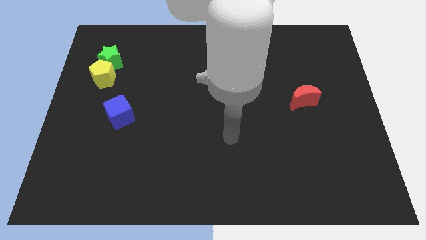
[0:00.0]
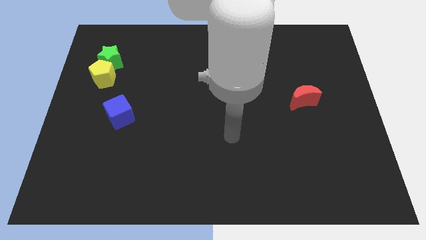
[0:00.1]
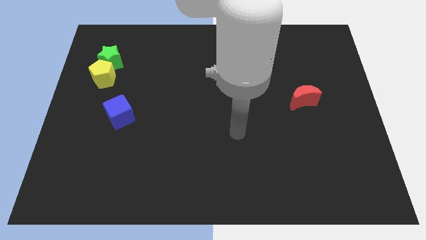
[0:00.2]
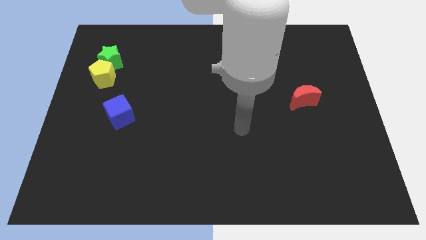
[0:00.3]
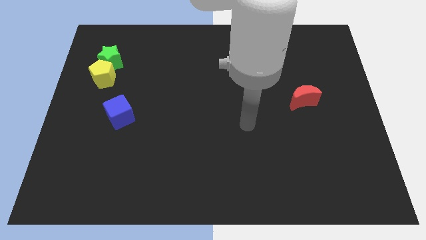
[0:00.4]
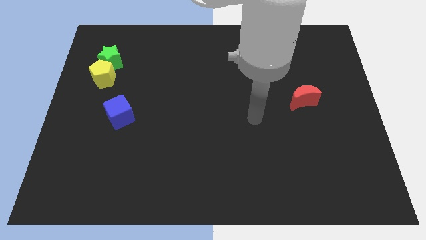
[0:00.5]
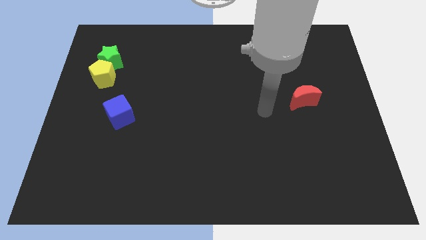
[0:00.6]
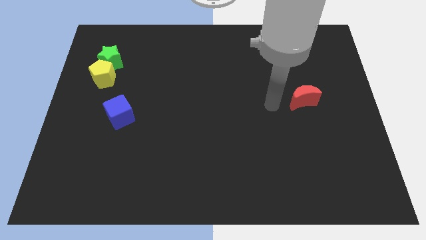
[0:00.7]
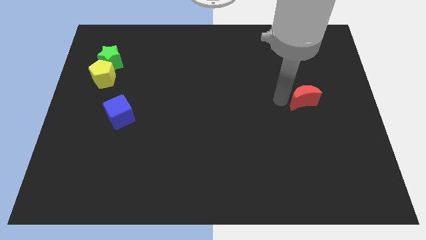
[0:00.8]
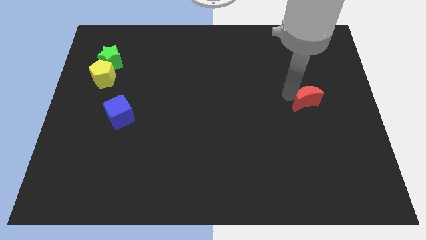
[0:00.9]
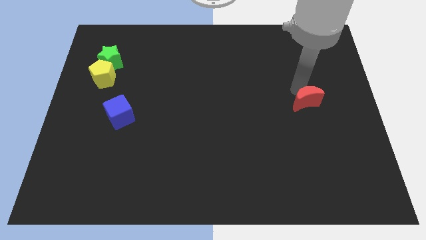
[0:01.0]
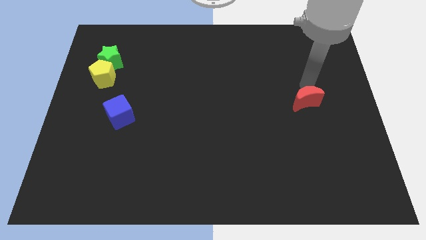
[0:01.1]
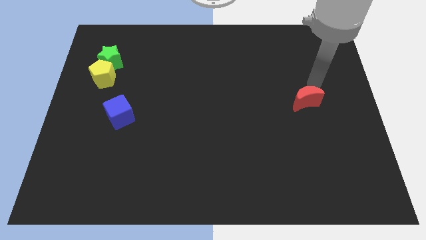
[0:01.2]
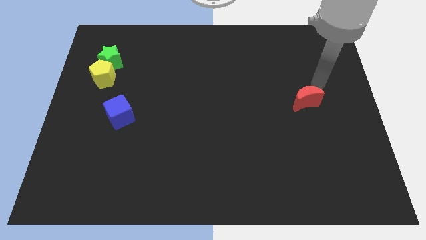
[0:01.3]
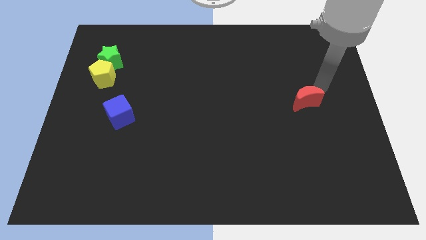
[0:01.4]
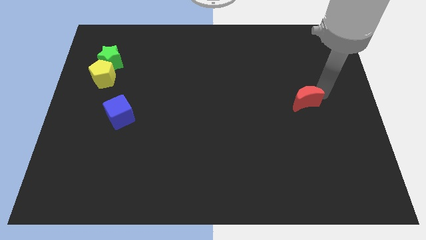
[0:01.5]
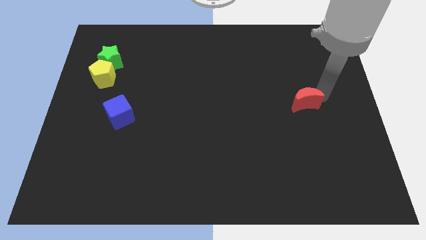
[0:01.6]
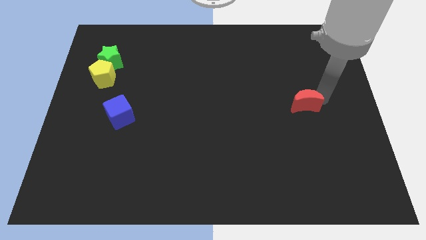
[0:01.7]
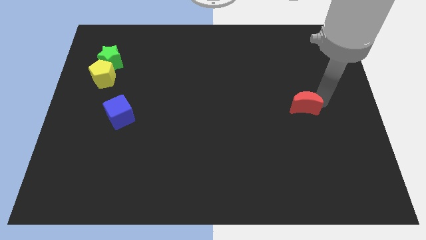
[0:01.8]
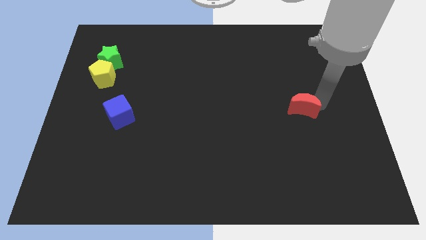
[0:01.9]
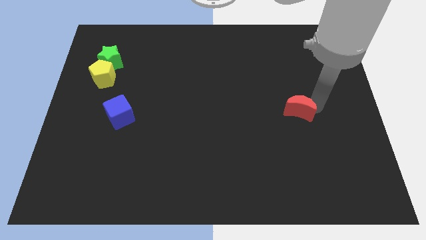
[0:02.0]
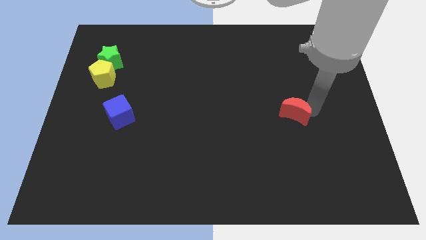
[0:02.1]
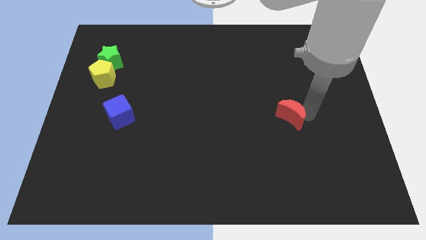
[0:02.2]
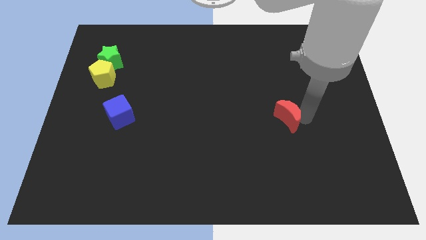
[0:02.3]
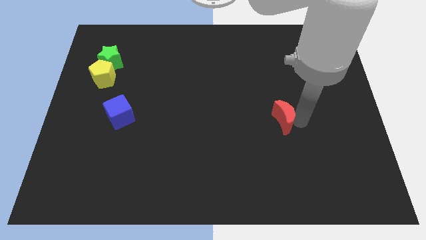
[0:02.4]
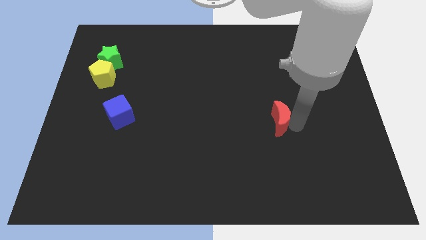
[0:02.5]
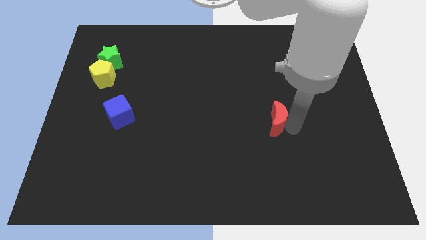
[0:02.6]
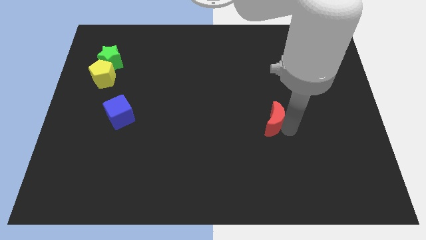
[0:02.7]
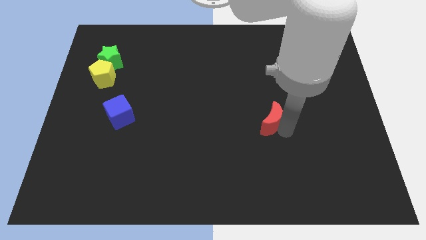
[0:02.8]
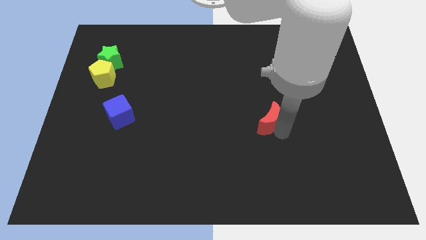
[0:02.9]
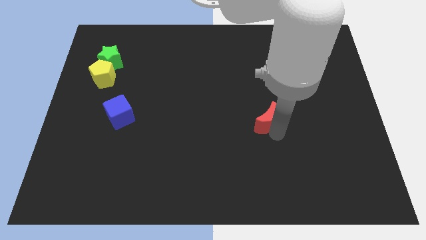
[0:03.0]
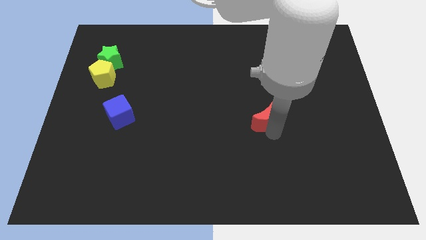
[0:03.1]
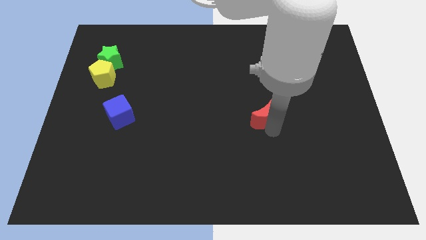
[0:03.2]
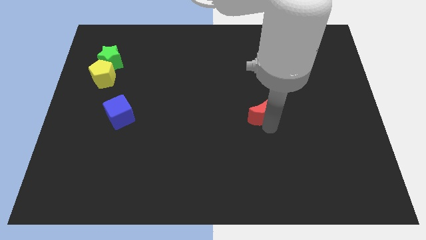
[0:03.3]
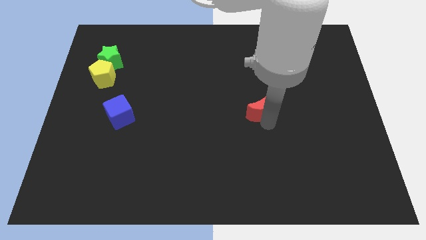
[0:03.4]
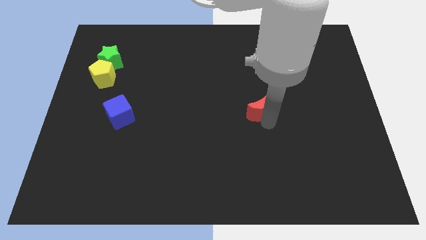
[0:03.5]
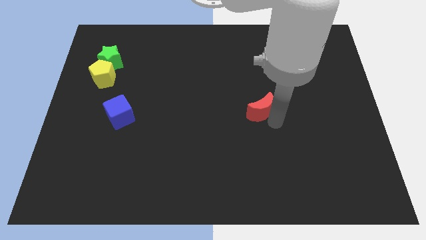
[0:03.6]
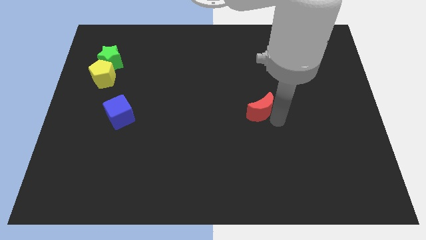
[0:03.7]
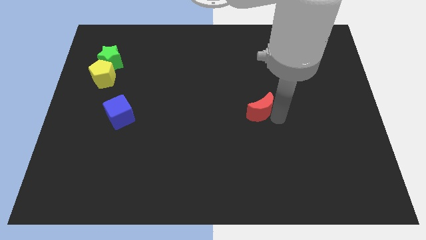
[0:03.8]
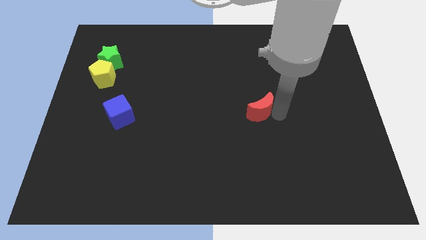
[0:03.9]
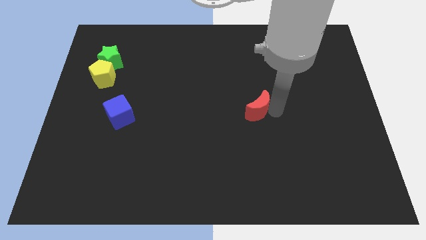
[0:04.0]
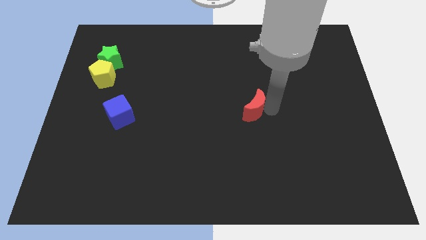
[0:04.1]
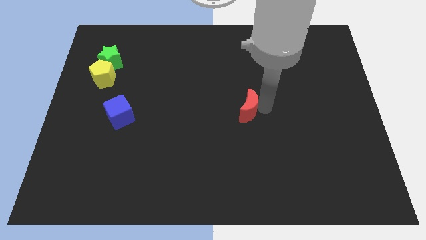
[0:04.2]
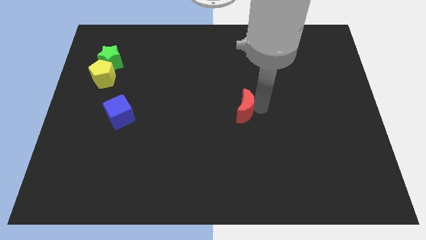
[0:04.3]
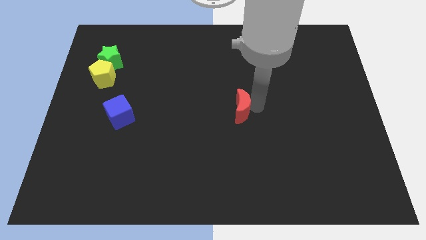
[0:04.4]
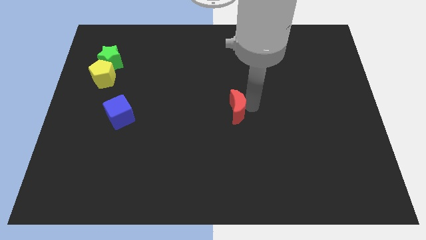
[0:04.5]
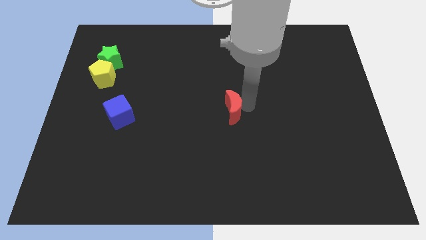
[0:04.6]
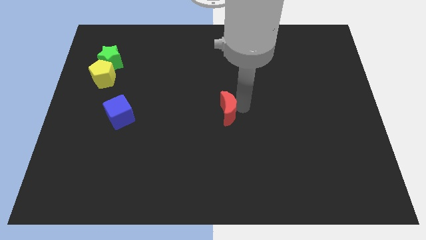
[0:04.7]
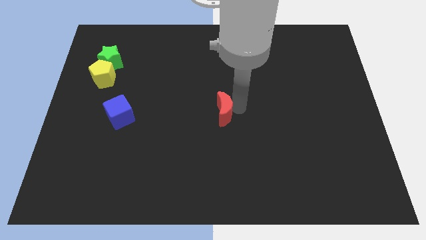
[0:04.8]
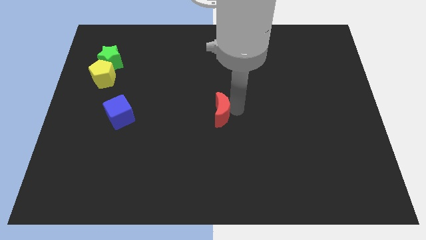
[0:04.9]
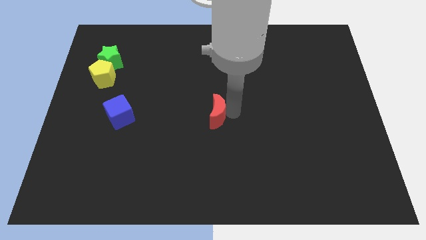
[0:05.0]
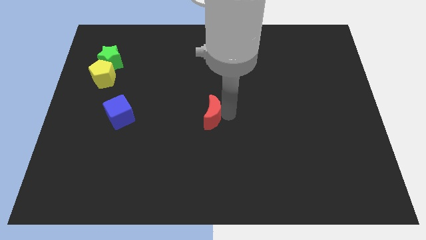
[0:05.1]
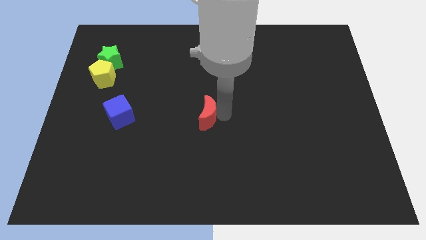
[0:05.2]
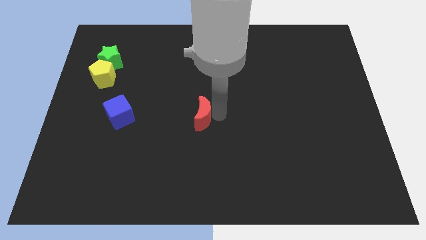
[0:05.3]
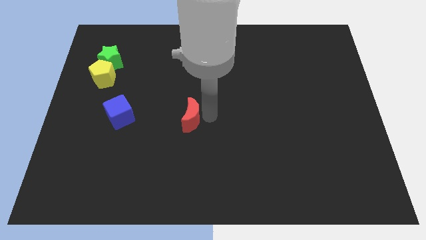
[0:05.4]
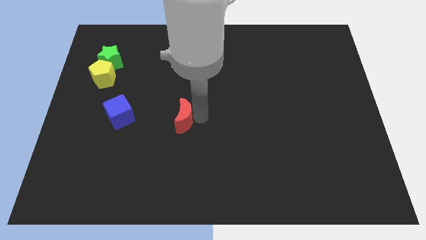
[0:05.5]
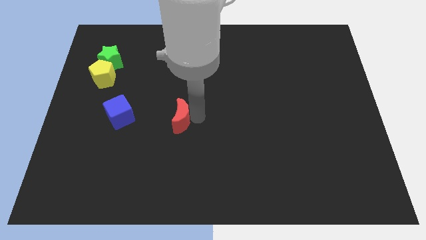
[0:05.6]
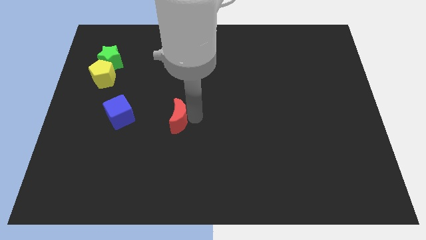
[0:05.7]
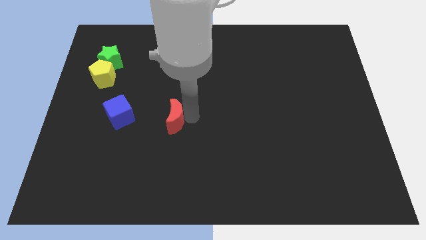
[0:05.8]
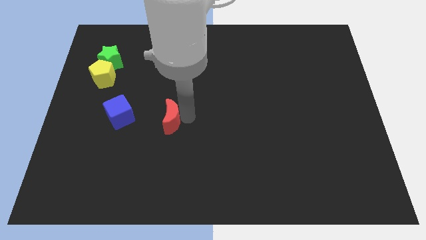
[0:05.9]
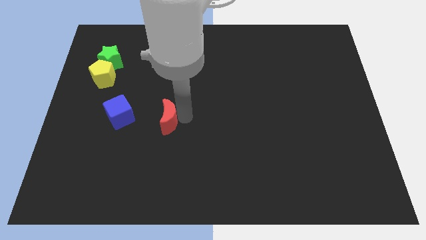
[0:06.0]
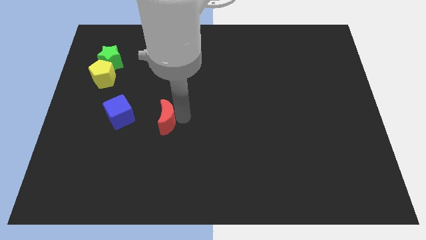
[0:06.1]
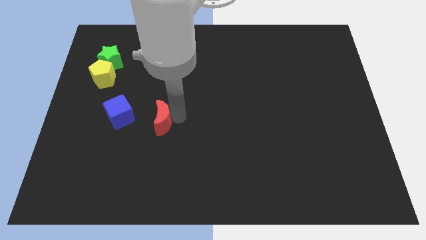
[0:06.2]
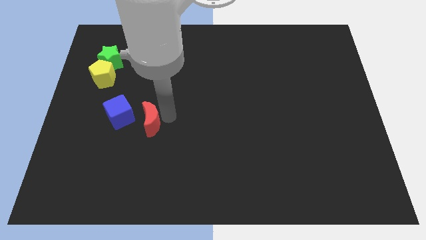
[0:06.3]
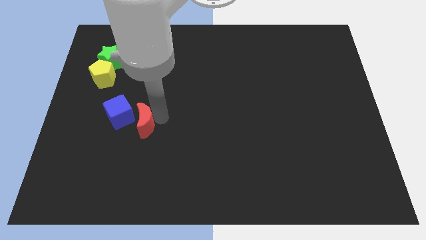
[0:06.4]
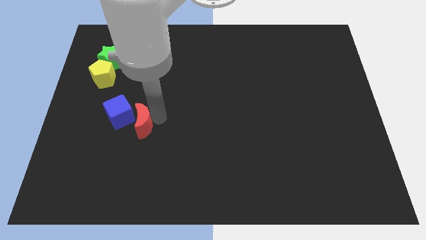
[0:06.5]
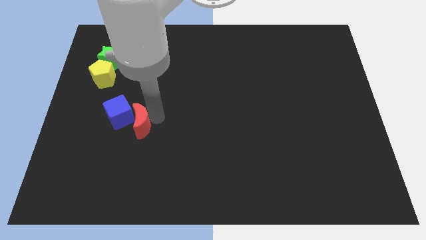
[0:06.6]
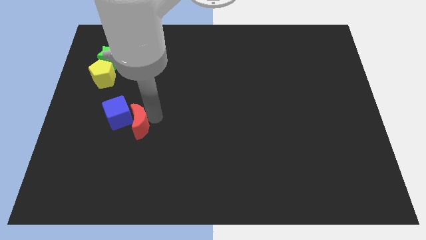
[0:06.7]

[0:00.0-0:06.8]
slide the red moon next to the blue block

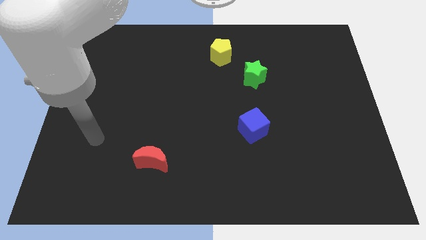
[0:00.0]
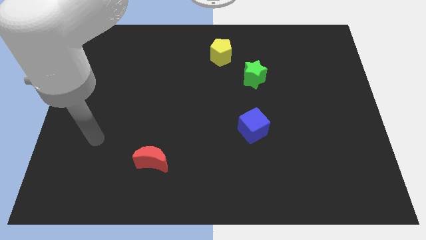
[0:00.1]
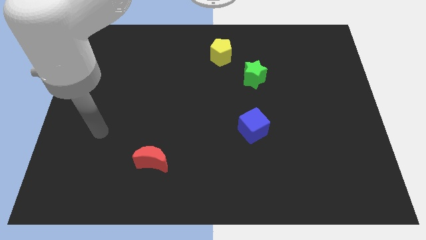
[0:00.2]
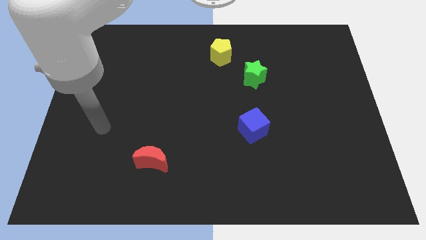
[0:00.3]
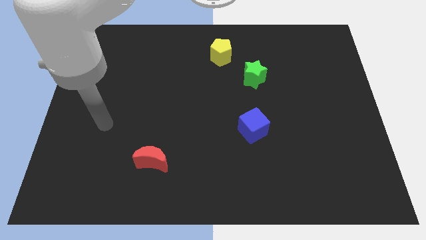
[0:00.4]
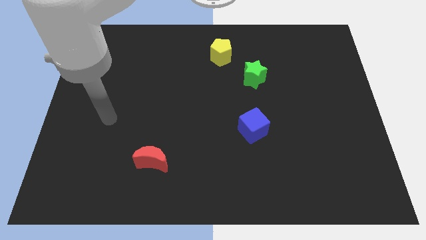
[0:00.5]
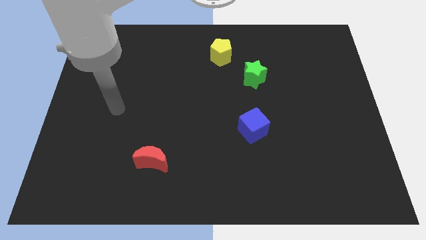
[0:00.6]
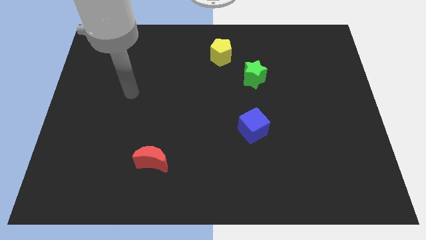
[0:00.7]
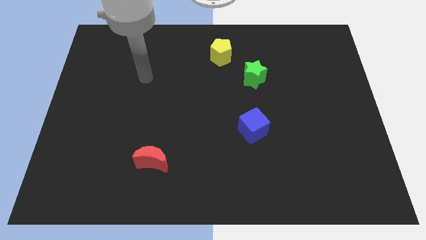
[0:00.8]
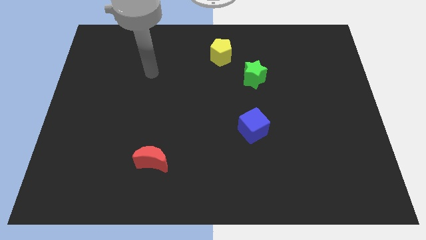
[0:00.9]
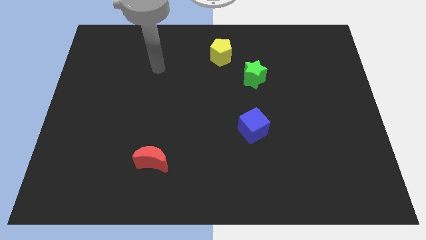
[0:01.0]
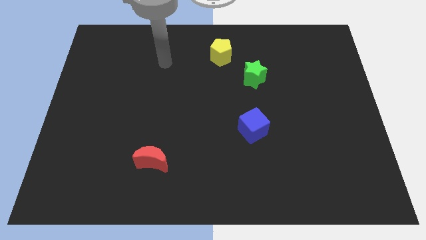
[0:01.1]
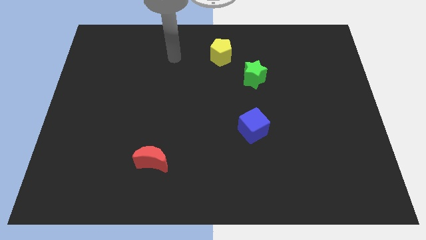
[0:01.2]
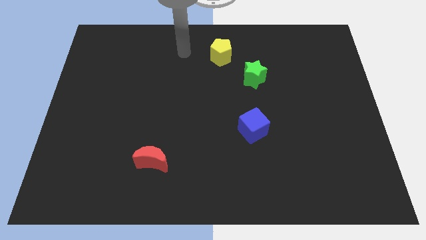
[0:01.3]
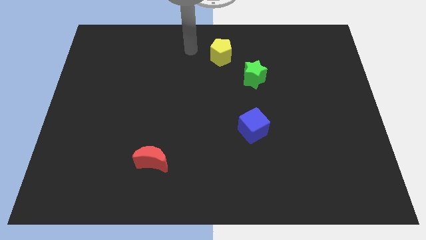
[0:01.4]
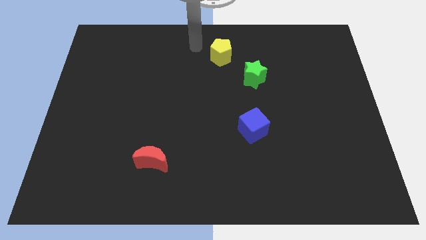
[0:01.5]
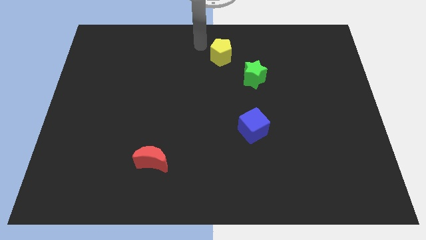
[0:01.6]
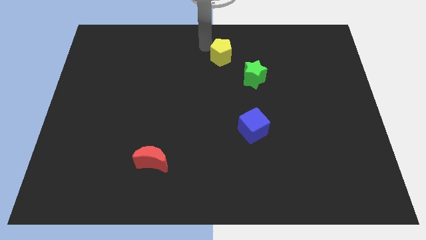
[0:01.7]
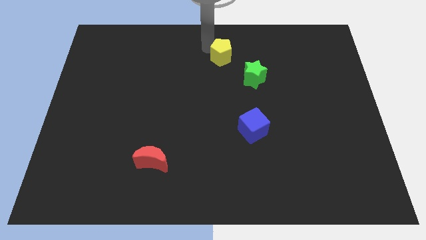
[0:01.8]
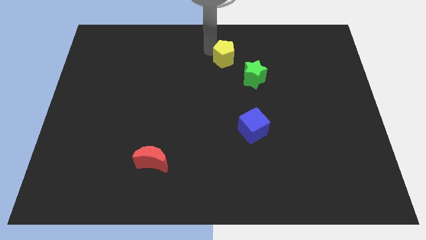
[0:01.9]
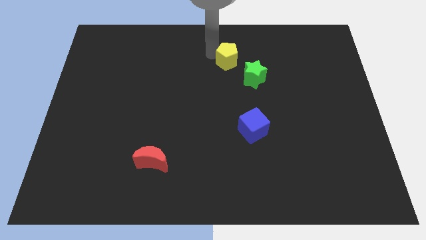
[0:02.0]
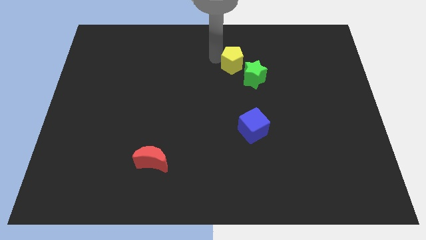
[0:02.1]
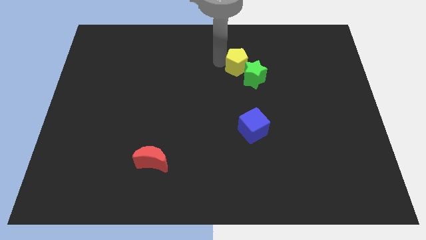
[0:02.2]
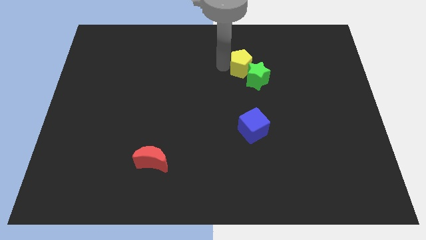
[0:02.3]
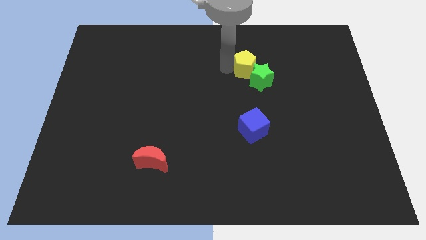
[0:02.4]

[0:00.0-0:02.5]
push the yellow block towards the green block
